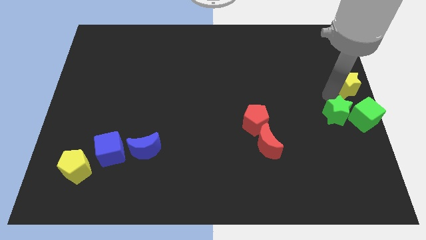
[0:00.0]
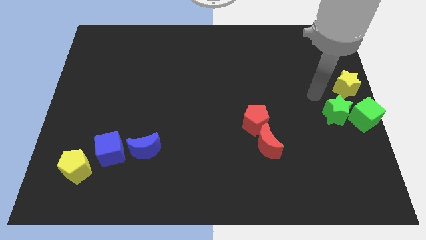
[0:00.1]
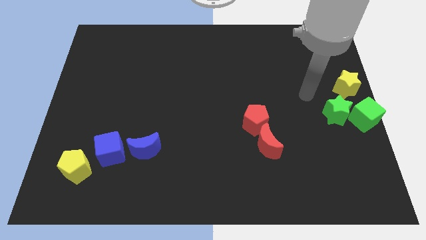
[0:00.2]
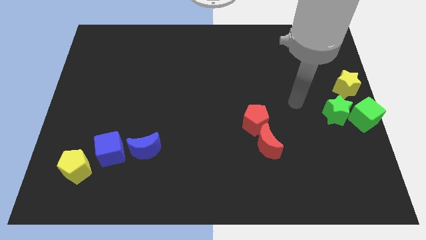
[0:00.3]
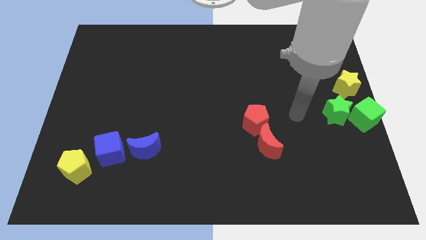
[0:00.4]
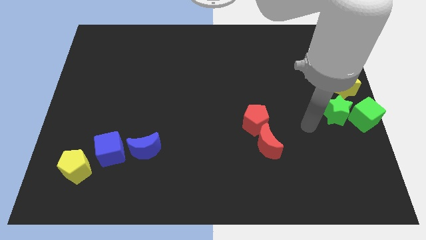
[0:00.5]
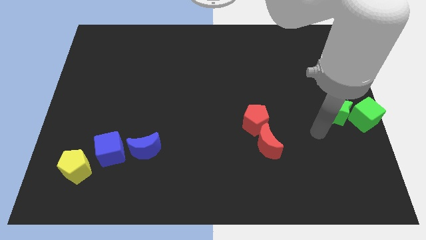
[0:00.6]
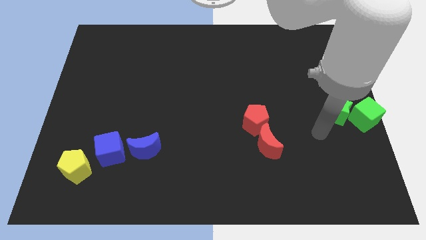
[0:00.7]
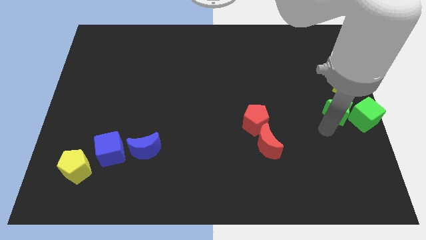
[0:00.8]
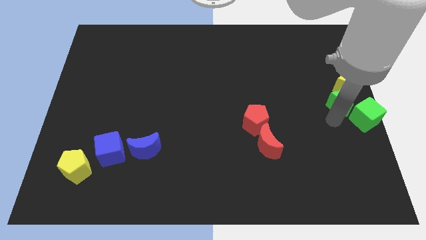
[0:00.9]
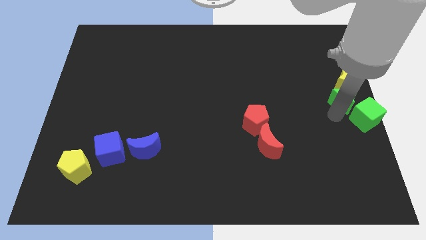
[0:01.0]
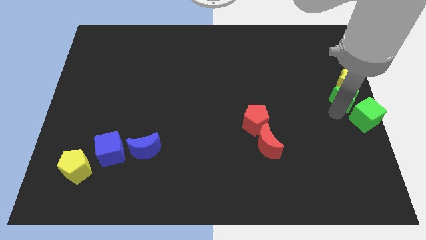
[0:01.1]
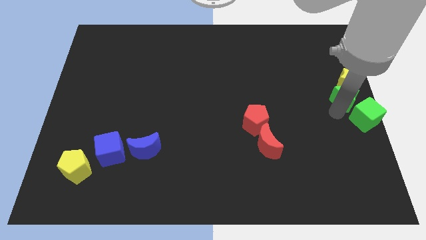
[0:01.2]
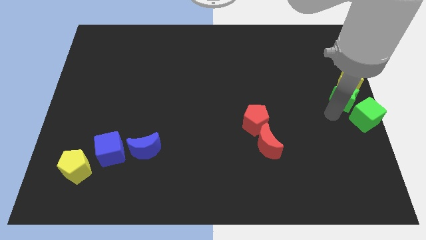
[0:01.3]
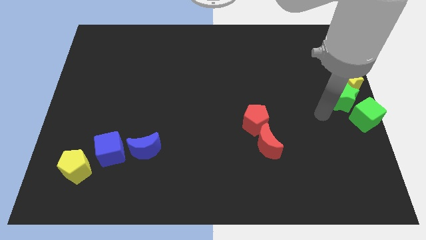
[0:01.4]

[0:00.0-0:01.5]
push the green star into the yellow star

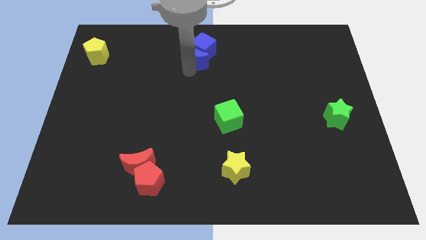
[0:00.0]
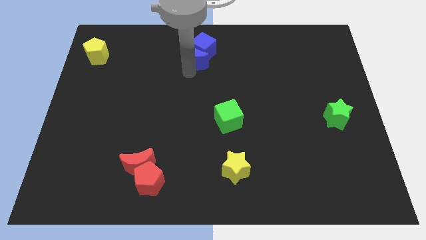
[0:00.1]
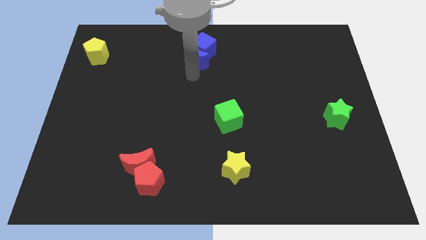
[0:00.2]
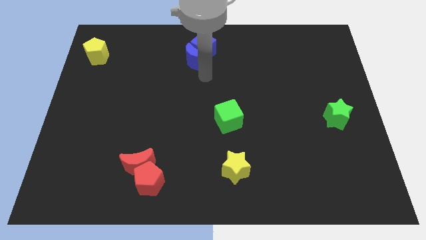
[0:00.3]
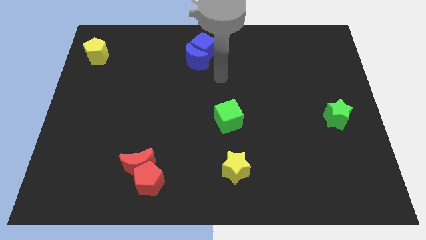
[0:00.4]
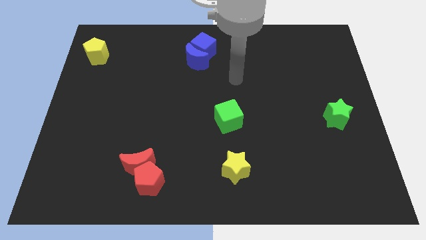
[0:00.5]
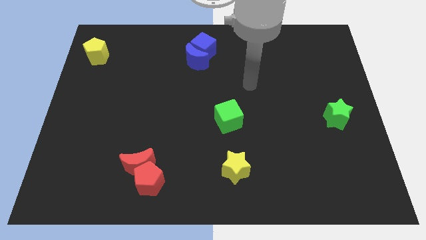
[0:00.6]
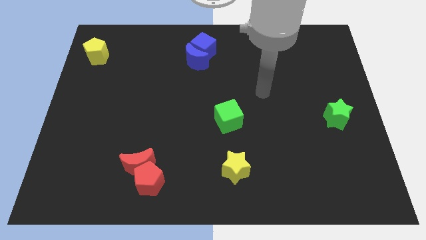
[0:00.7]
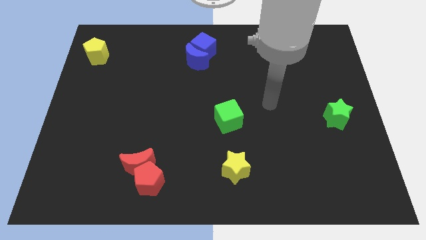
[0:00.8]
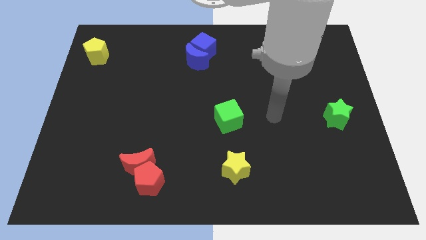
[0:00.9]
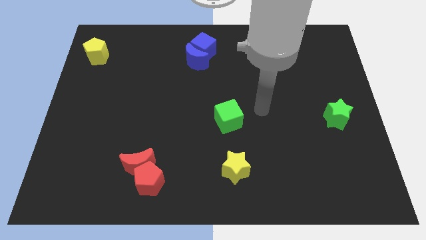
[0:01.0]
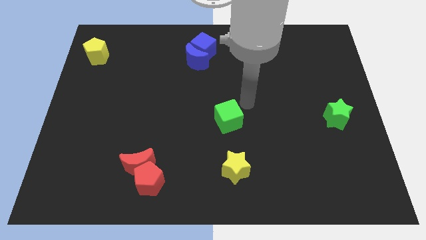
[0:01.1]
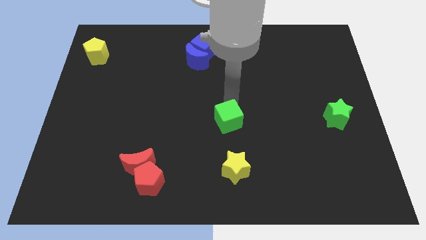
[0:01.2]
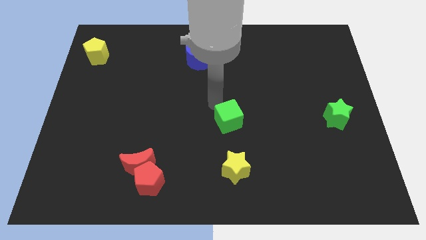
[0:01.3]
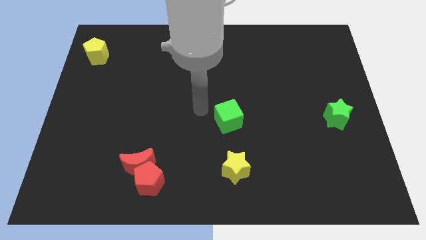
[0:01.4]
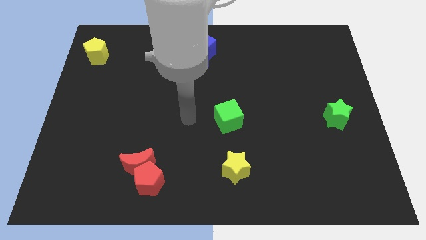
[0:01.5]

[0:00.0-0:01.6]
move your arm away from the blue moon

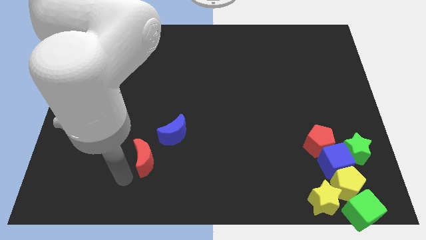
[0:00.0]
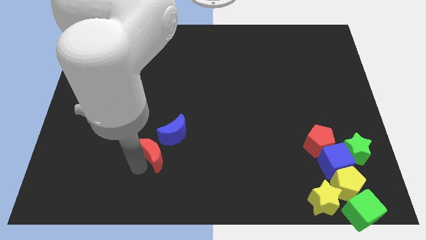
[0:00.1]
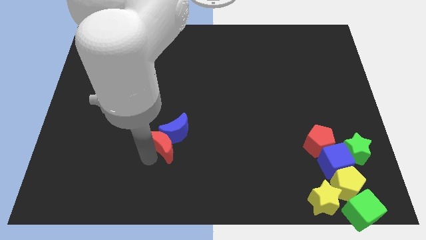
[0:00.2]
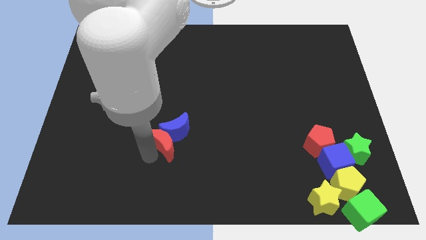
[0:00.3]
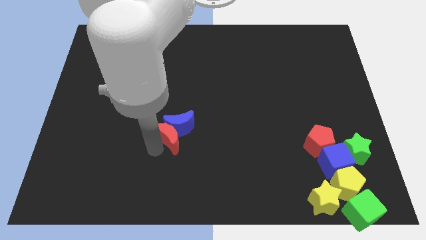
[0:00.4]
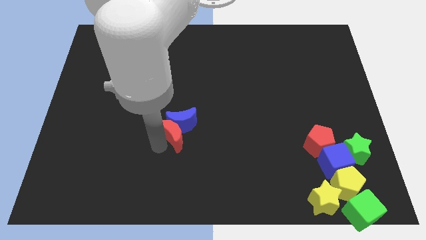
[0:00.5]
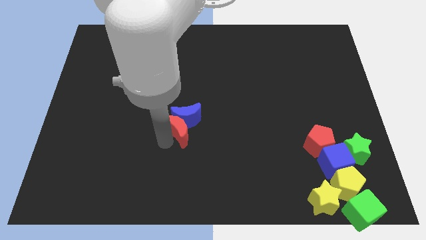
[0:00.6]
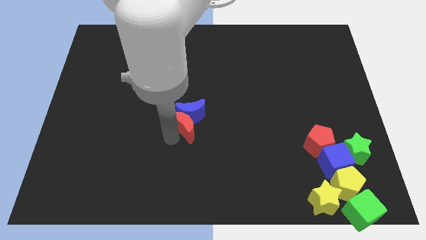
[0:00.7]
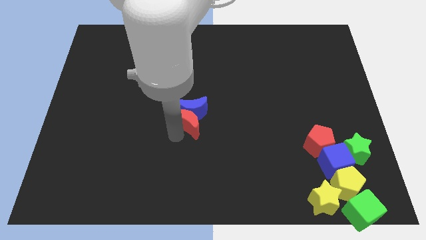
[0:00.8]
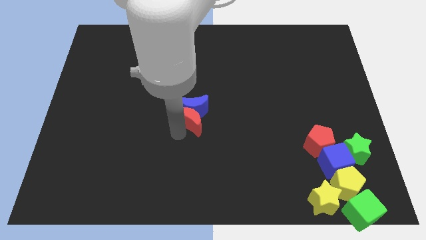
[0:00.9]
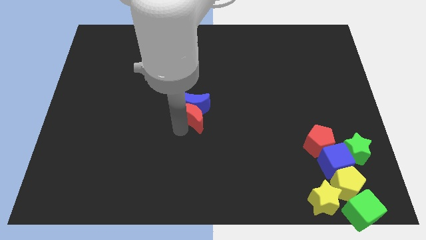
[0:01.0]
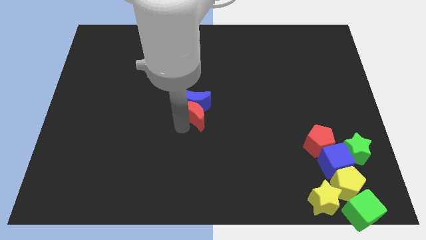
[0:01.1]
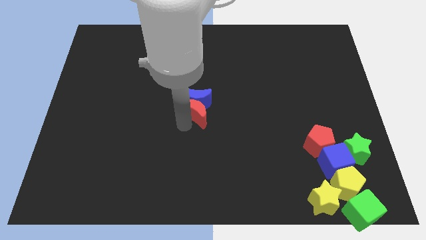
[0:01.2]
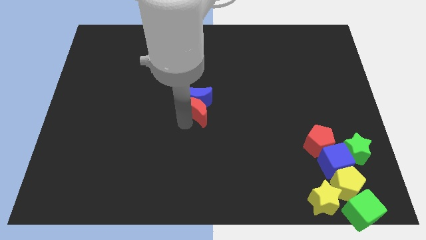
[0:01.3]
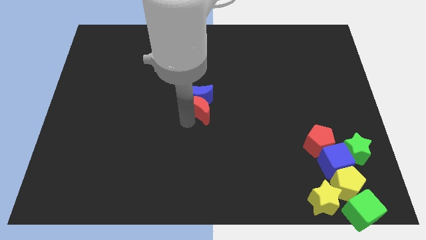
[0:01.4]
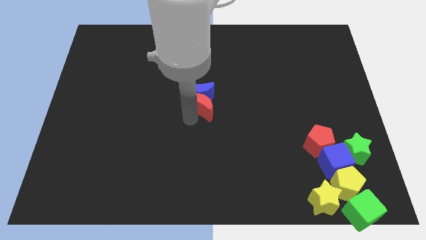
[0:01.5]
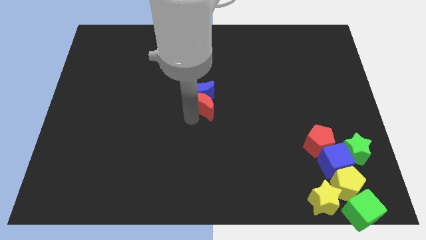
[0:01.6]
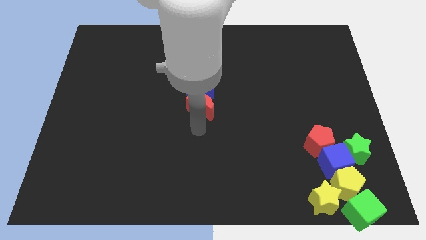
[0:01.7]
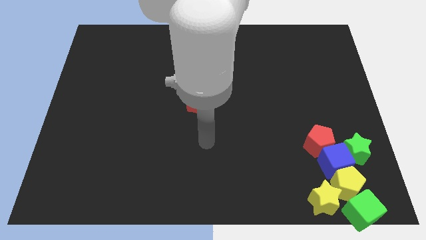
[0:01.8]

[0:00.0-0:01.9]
move the red crescent and the blue crescent together to the center of the board

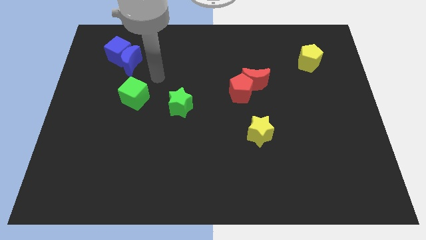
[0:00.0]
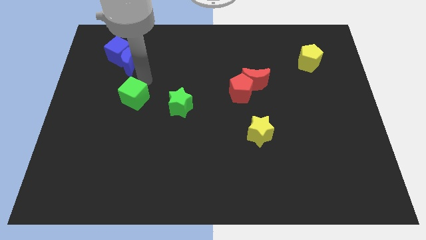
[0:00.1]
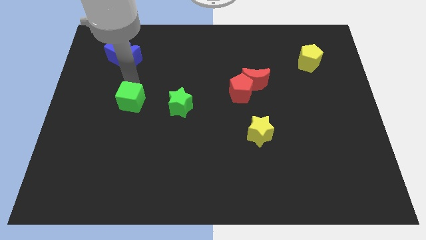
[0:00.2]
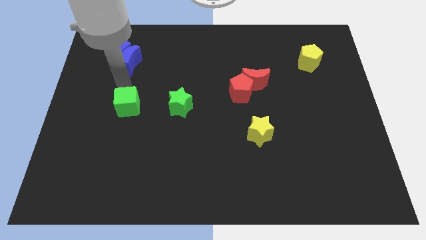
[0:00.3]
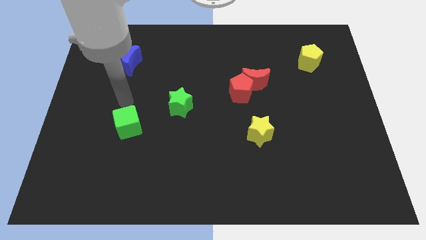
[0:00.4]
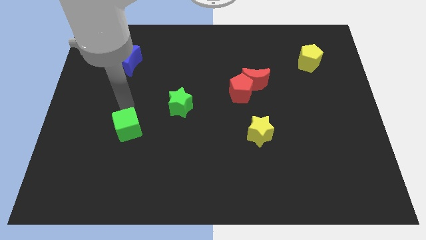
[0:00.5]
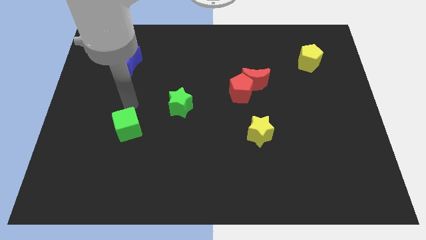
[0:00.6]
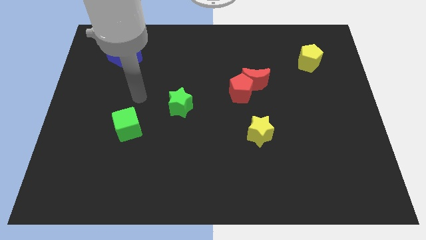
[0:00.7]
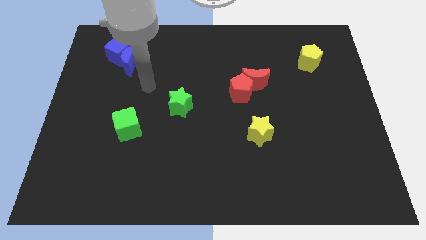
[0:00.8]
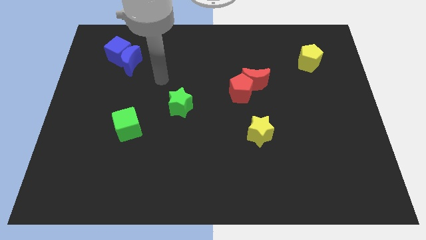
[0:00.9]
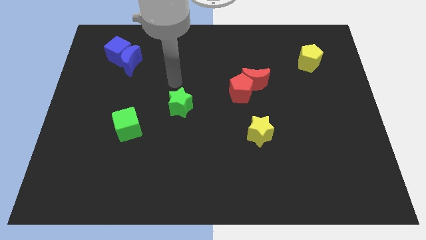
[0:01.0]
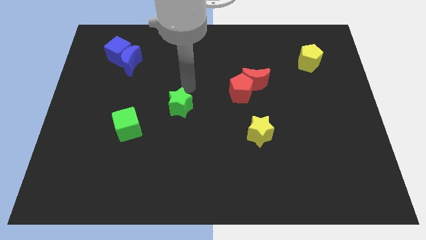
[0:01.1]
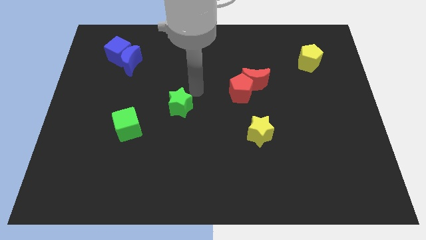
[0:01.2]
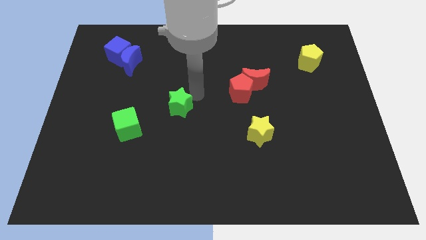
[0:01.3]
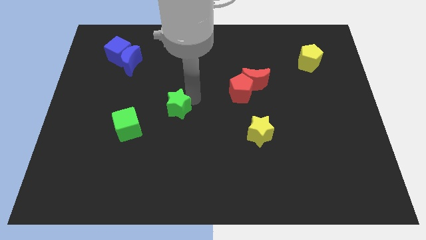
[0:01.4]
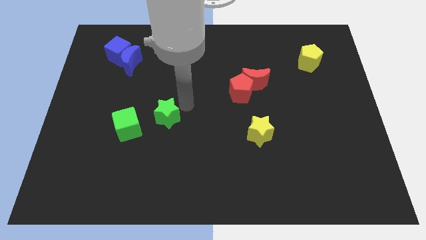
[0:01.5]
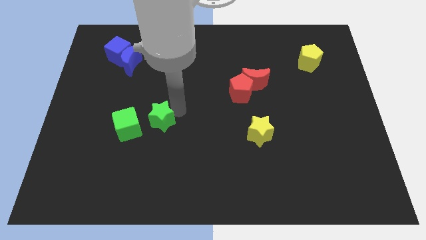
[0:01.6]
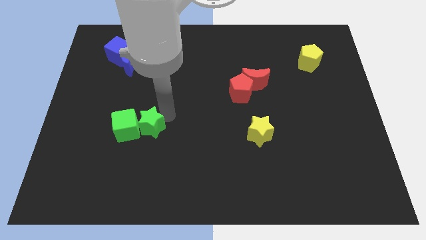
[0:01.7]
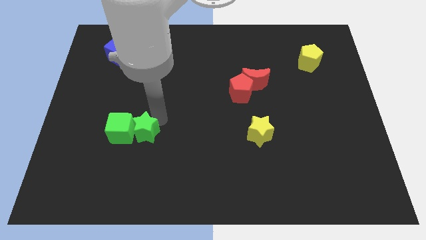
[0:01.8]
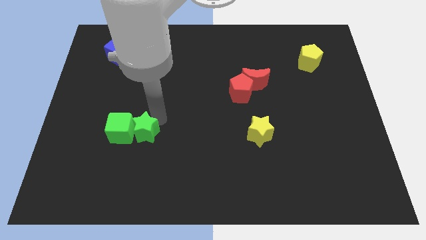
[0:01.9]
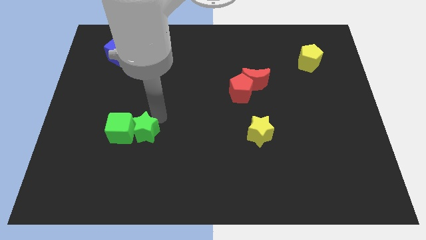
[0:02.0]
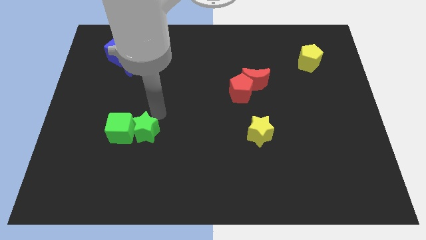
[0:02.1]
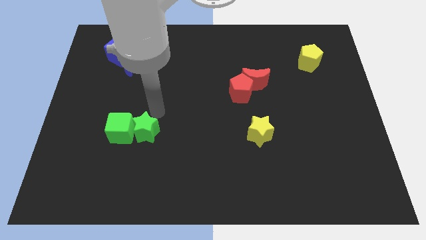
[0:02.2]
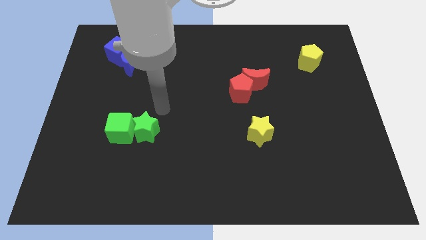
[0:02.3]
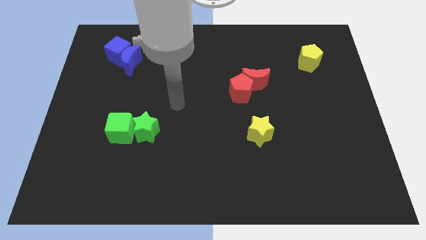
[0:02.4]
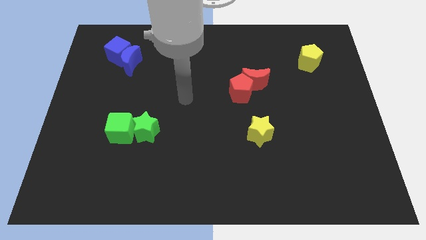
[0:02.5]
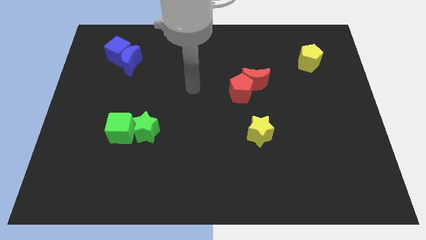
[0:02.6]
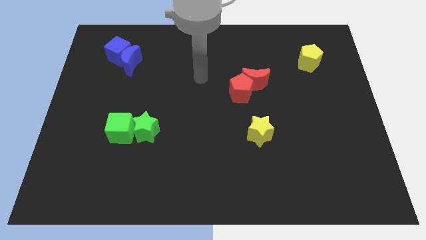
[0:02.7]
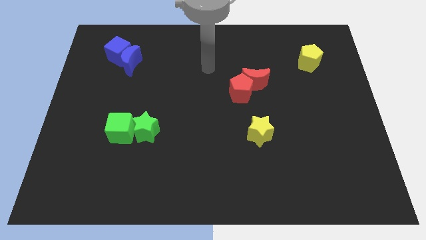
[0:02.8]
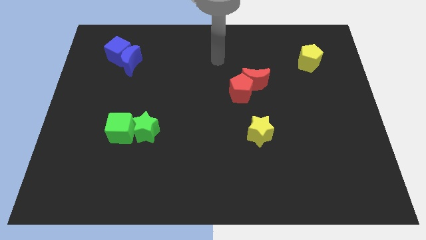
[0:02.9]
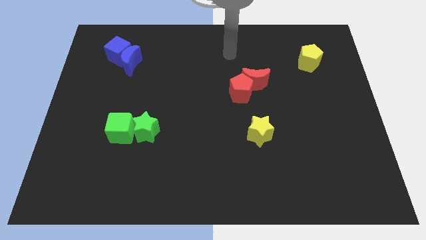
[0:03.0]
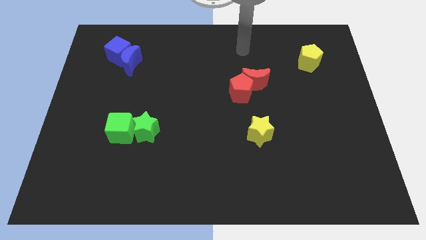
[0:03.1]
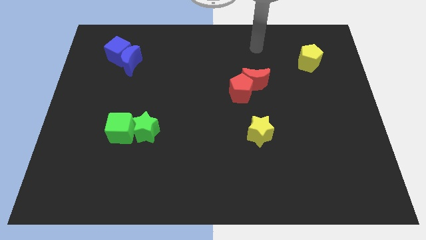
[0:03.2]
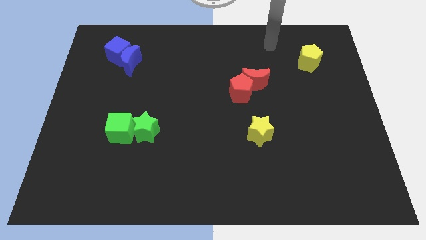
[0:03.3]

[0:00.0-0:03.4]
place the green star to the right of the green cube

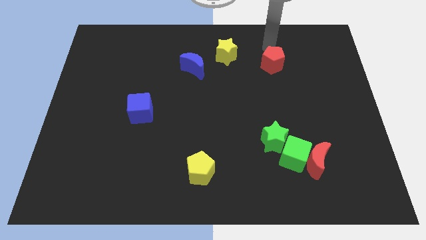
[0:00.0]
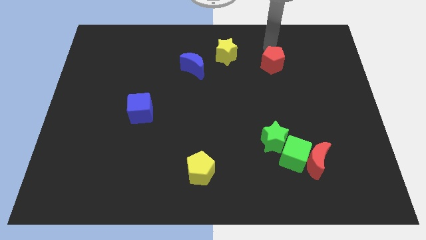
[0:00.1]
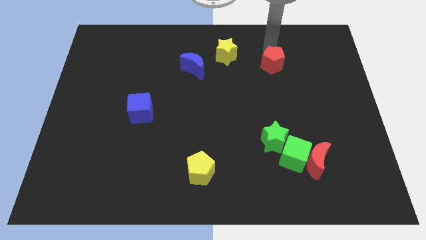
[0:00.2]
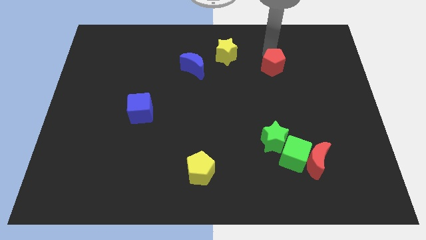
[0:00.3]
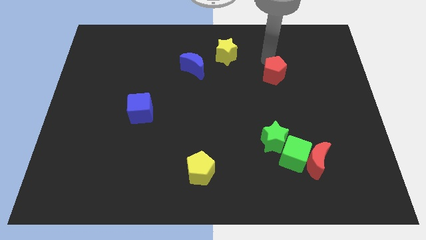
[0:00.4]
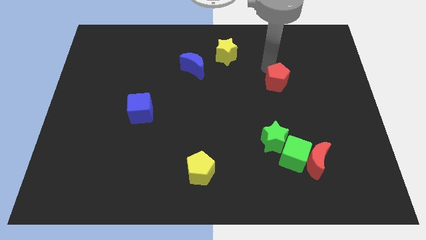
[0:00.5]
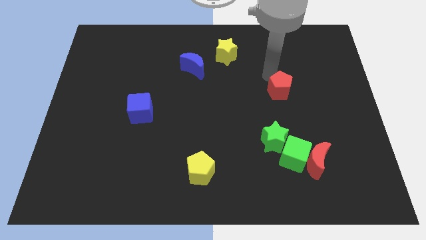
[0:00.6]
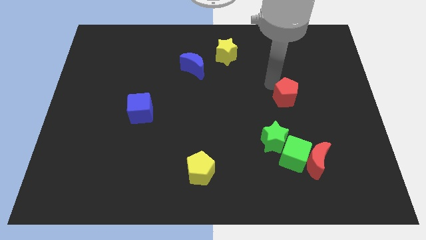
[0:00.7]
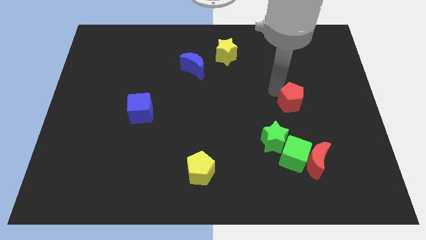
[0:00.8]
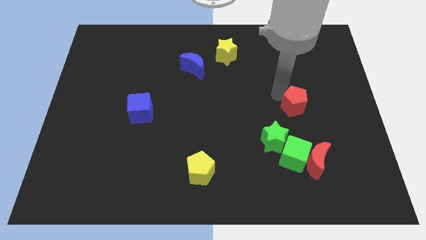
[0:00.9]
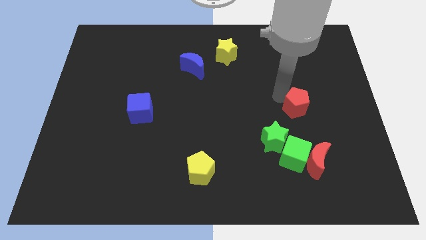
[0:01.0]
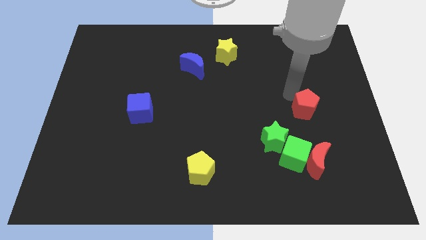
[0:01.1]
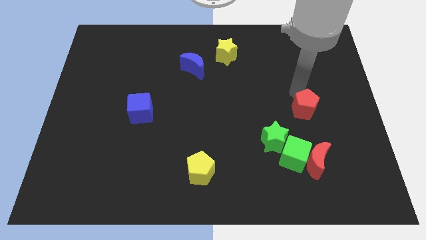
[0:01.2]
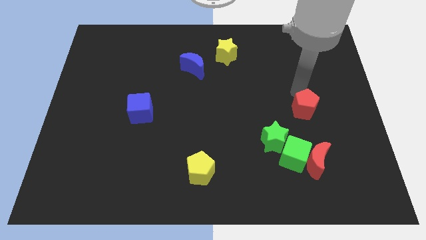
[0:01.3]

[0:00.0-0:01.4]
push the red pentagon aove the green cube
